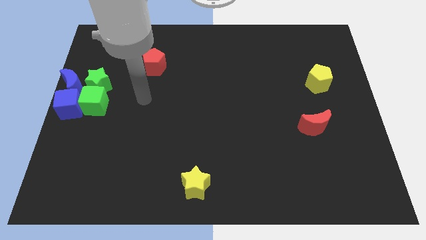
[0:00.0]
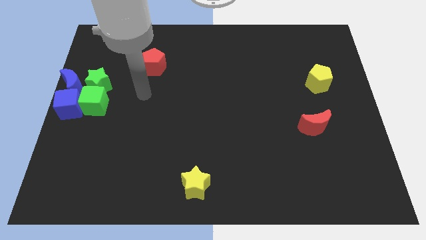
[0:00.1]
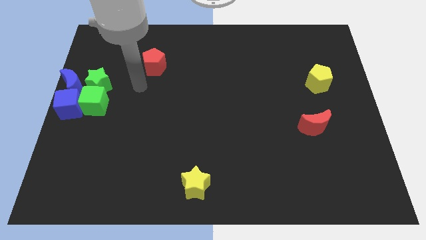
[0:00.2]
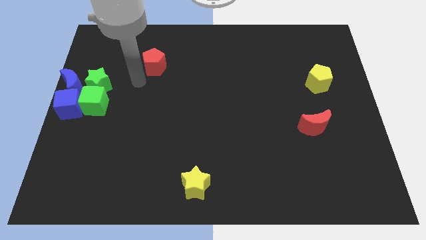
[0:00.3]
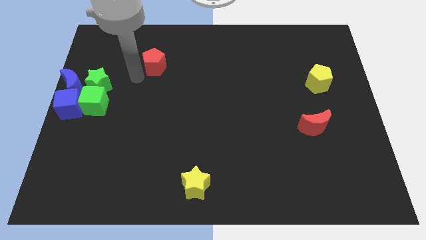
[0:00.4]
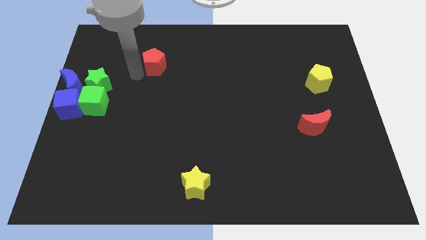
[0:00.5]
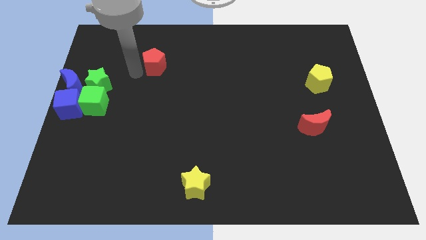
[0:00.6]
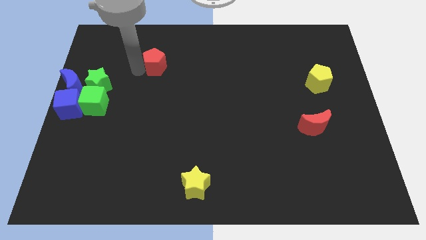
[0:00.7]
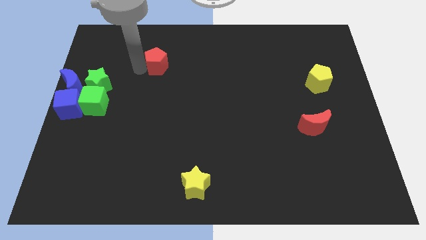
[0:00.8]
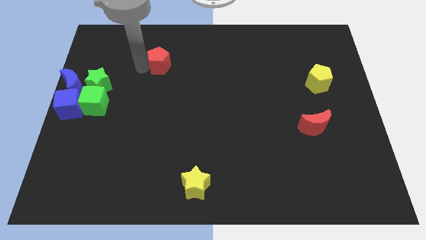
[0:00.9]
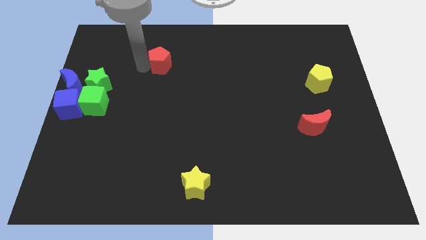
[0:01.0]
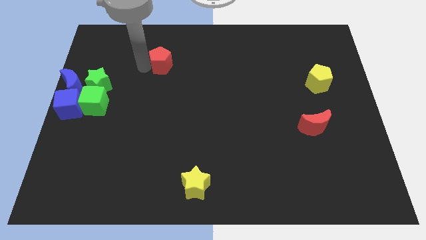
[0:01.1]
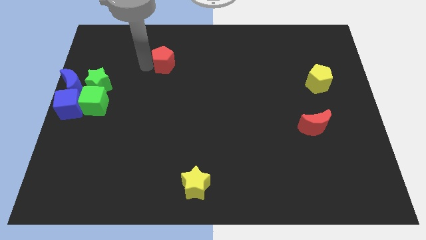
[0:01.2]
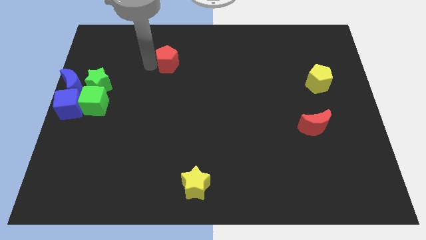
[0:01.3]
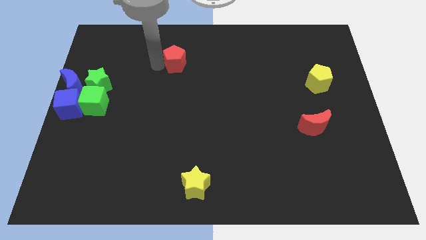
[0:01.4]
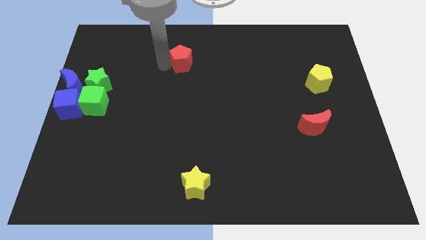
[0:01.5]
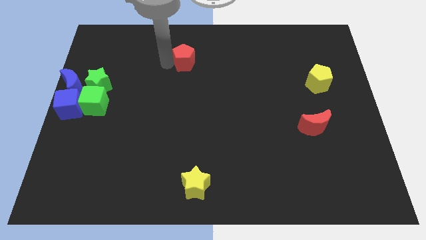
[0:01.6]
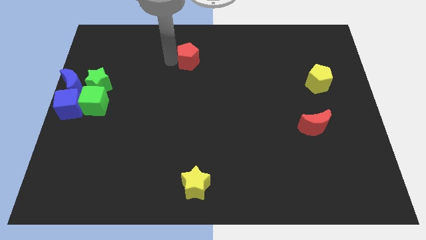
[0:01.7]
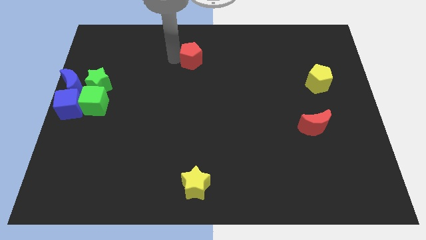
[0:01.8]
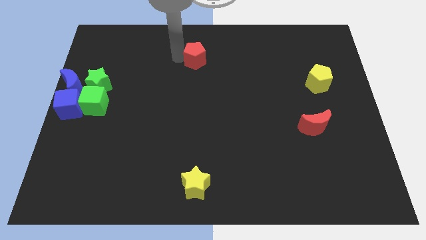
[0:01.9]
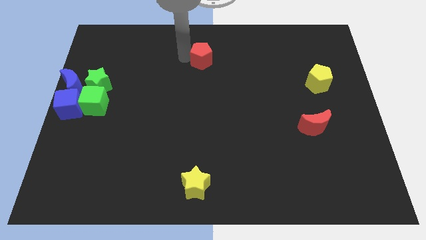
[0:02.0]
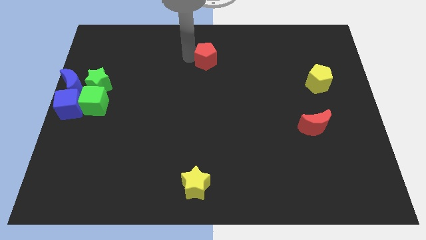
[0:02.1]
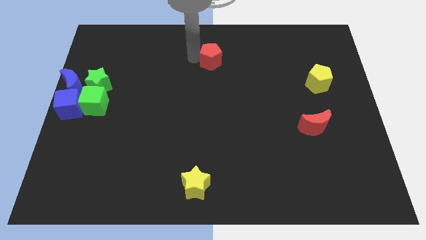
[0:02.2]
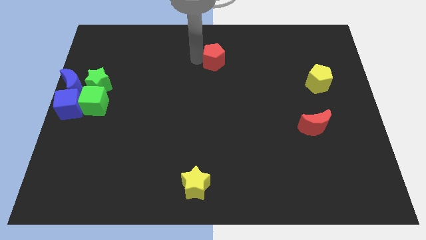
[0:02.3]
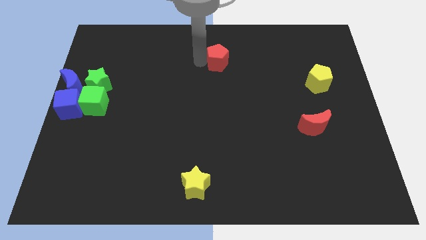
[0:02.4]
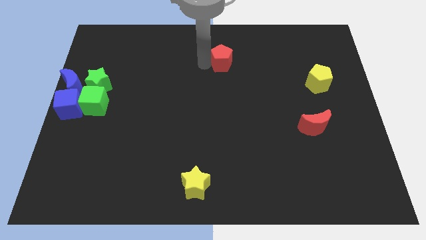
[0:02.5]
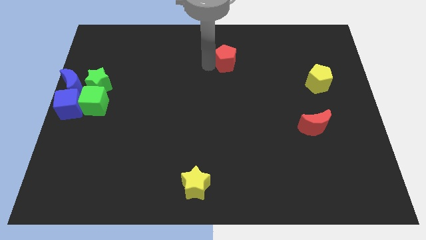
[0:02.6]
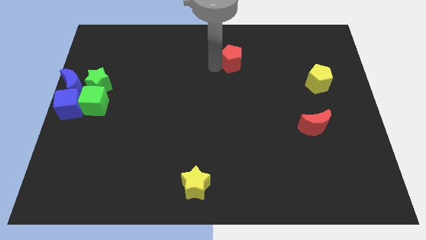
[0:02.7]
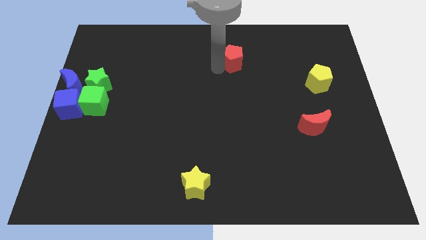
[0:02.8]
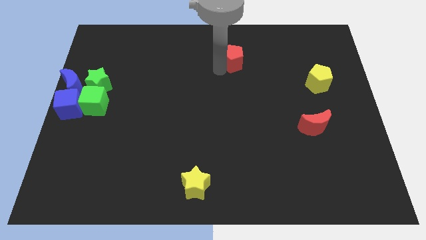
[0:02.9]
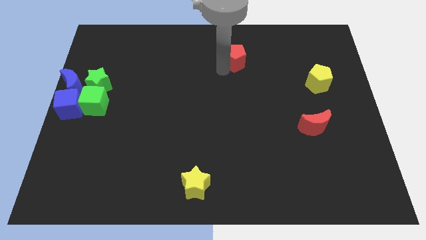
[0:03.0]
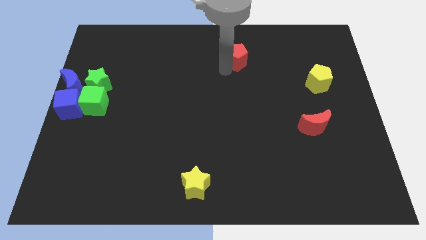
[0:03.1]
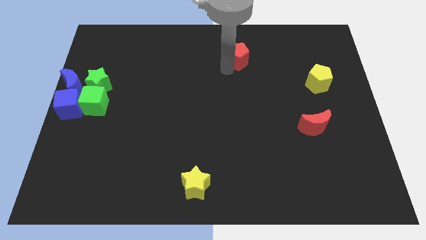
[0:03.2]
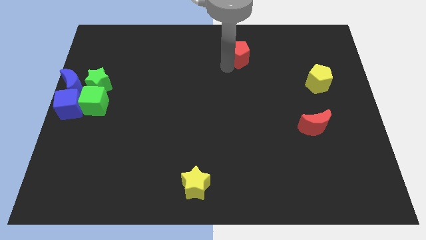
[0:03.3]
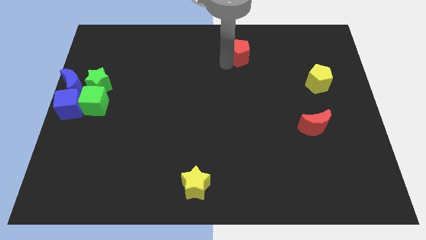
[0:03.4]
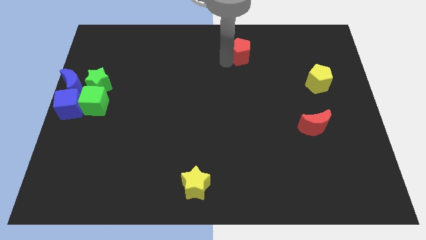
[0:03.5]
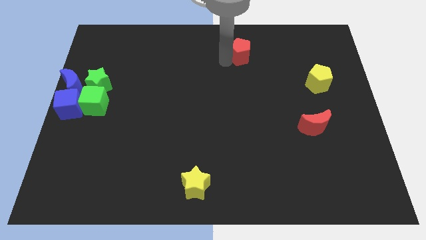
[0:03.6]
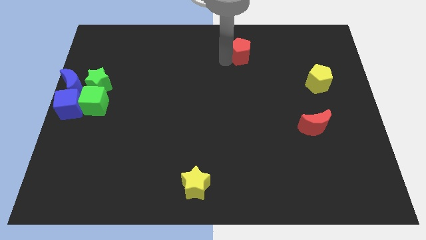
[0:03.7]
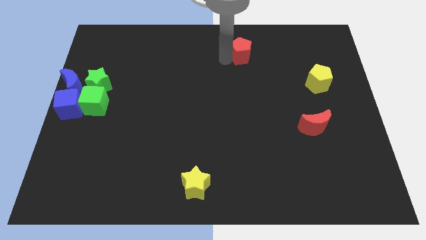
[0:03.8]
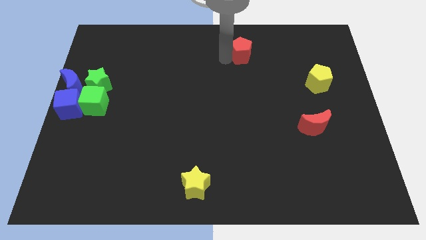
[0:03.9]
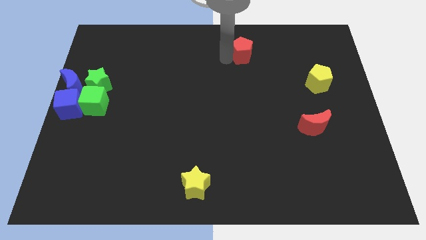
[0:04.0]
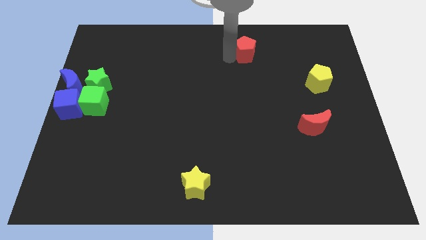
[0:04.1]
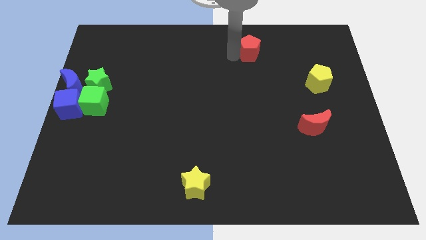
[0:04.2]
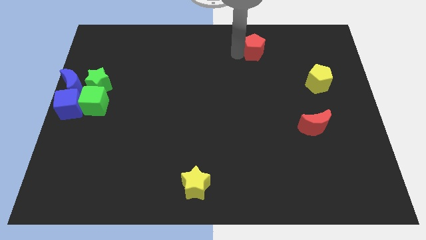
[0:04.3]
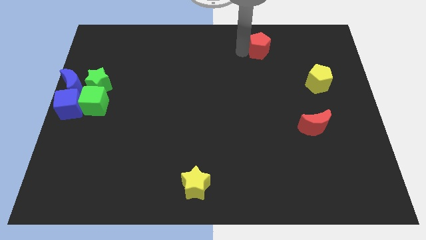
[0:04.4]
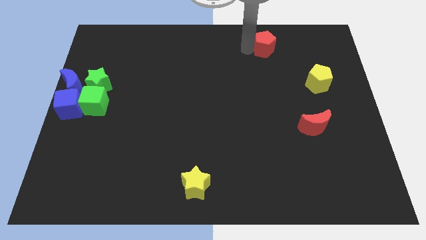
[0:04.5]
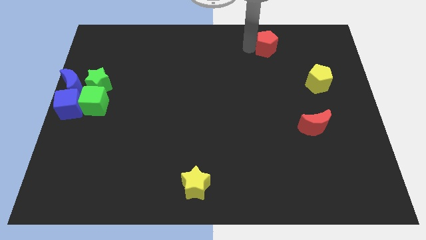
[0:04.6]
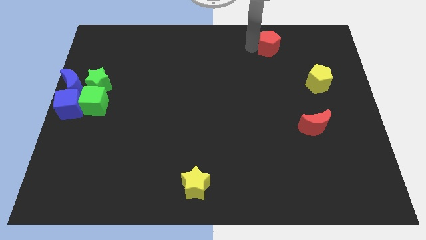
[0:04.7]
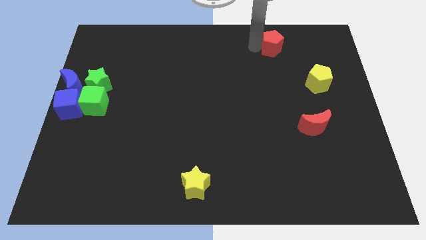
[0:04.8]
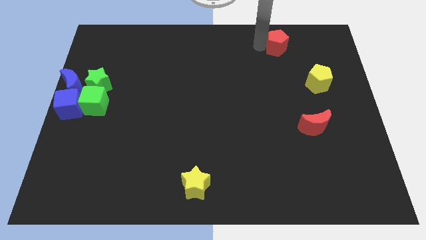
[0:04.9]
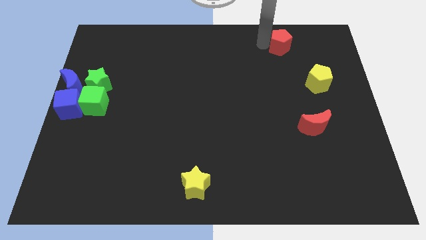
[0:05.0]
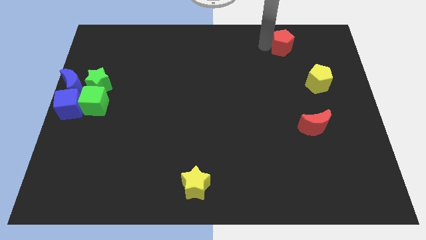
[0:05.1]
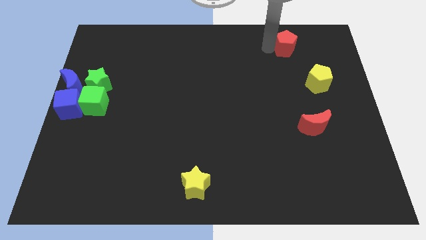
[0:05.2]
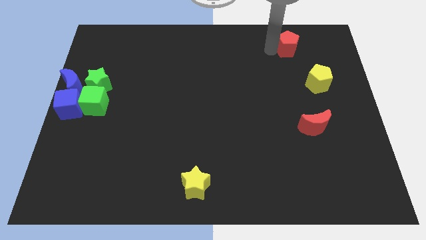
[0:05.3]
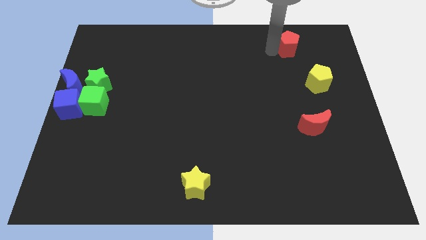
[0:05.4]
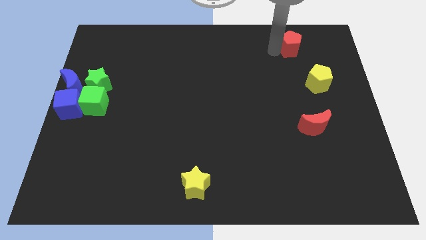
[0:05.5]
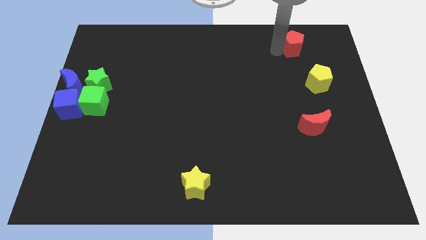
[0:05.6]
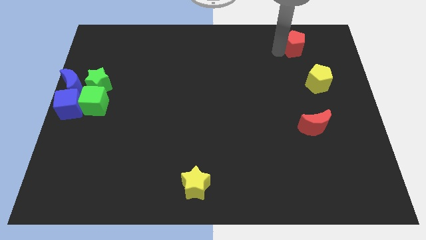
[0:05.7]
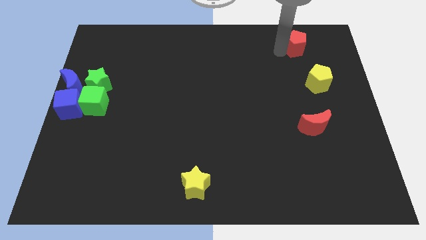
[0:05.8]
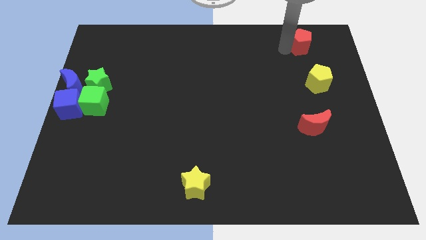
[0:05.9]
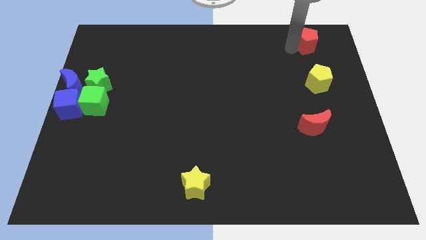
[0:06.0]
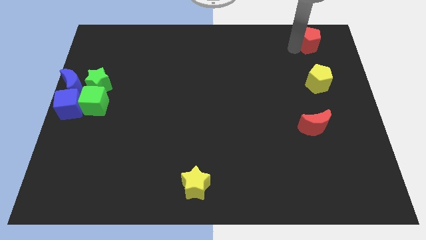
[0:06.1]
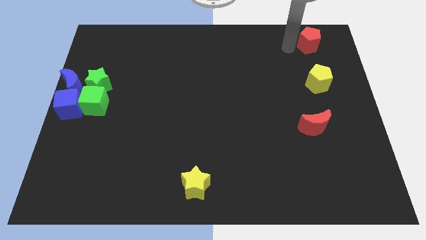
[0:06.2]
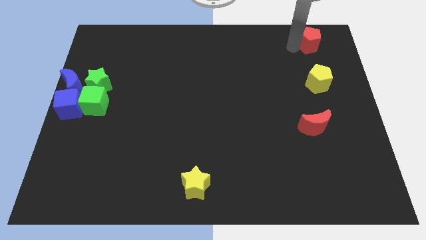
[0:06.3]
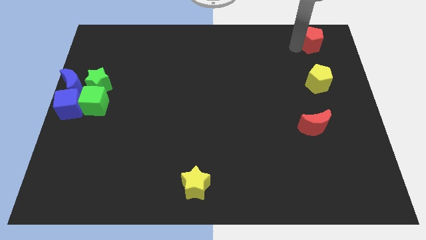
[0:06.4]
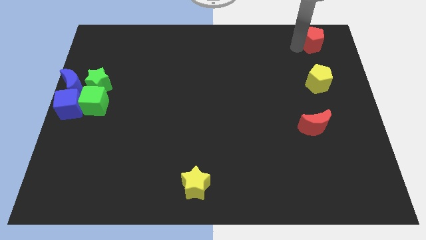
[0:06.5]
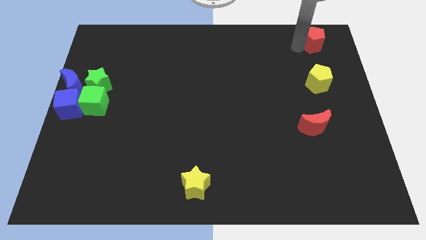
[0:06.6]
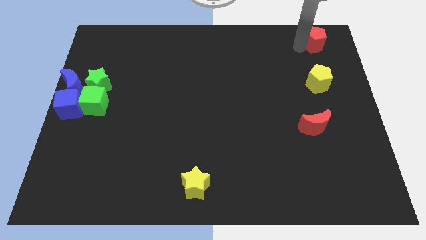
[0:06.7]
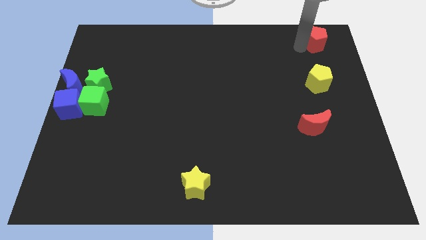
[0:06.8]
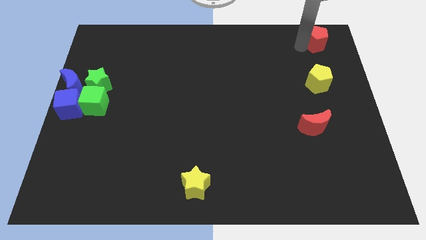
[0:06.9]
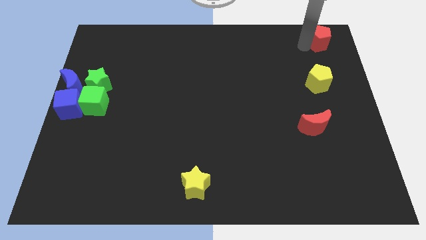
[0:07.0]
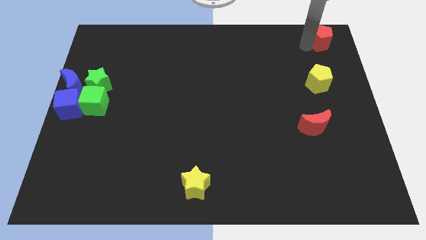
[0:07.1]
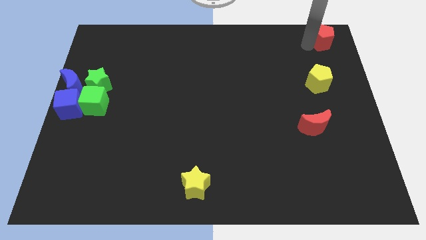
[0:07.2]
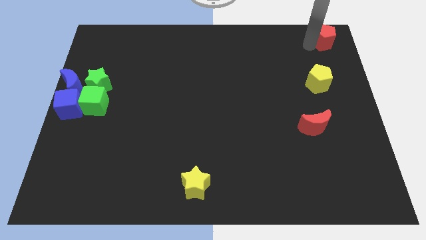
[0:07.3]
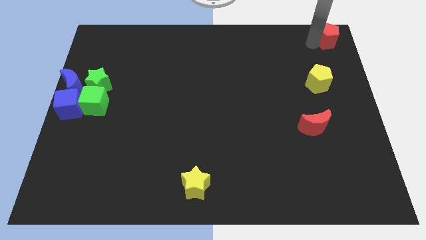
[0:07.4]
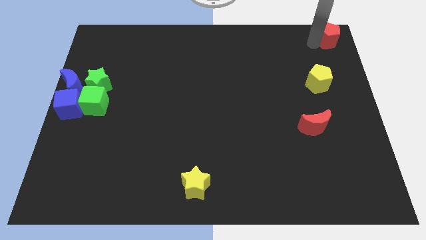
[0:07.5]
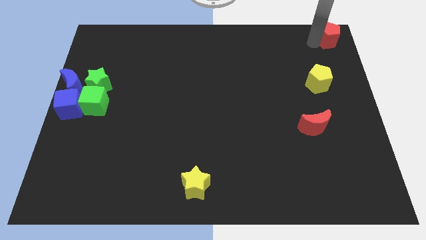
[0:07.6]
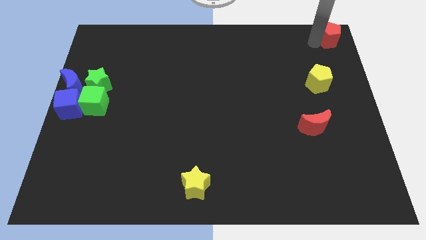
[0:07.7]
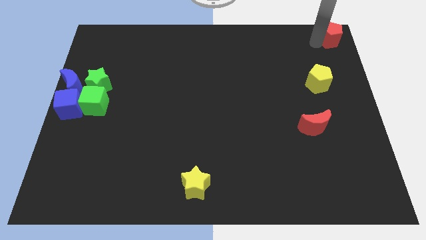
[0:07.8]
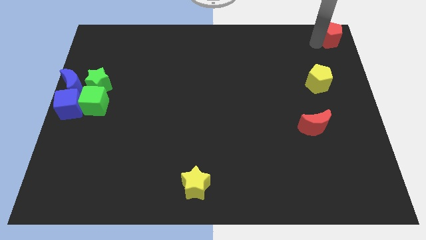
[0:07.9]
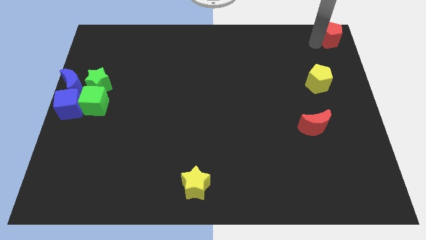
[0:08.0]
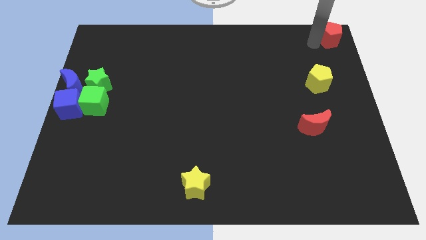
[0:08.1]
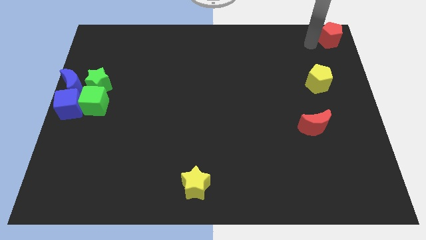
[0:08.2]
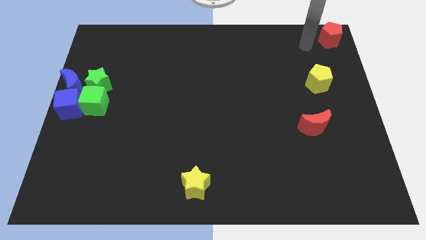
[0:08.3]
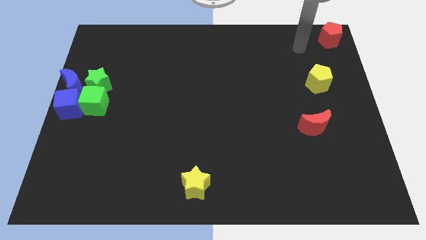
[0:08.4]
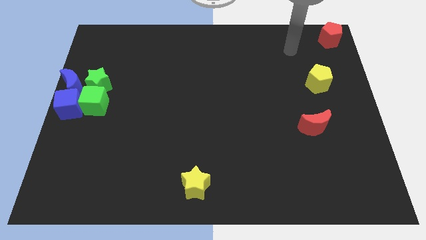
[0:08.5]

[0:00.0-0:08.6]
move the red pentagon to the top right of the board

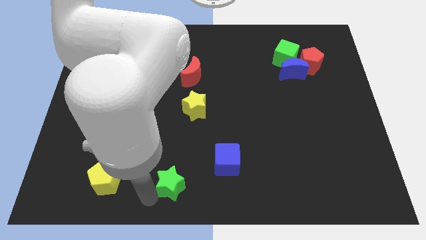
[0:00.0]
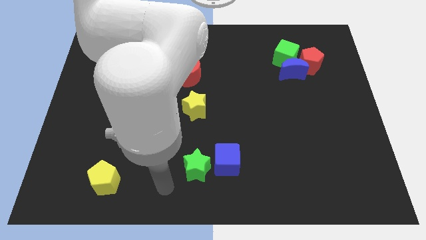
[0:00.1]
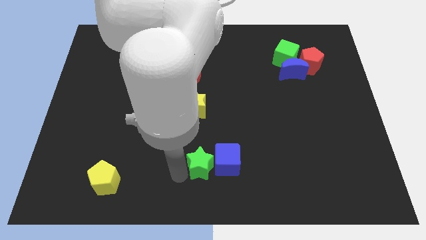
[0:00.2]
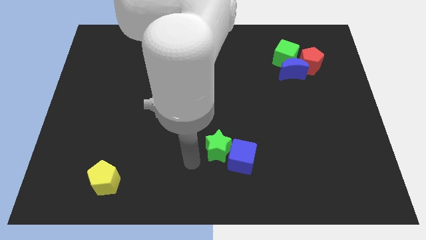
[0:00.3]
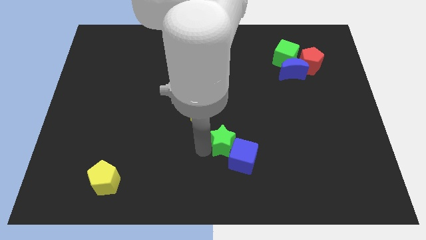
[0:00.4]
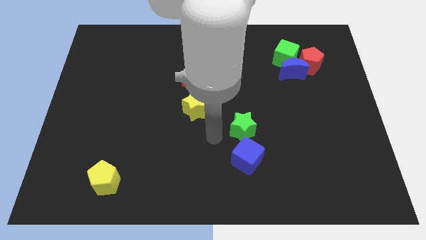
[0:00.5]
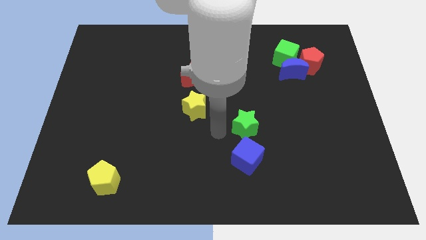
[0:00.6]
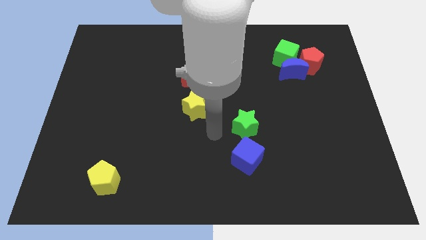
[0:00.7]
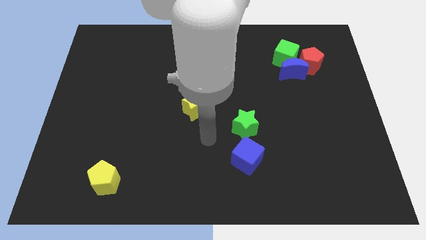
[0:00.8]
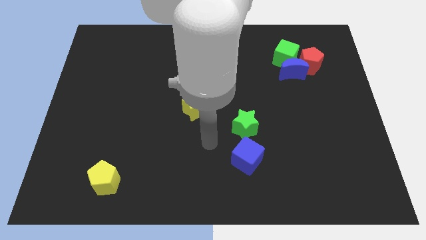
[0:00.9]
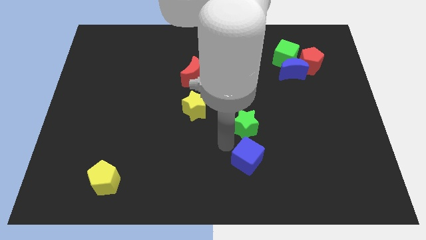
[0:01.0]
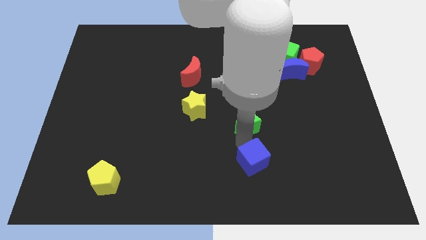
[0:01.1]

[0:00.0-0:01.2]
move the green star above the blue cube
